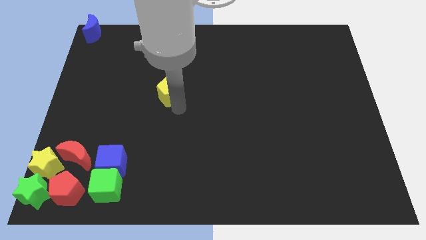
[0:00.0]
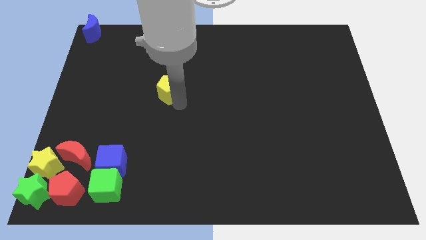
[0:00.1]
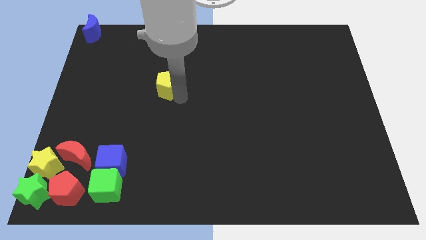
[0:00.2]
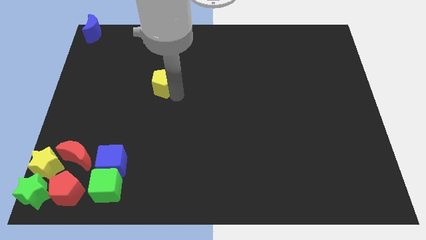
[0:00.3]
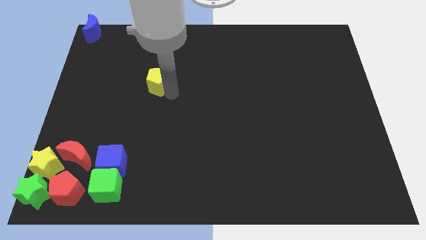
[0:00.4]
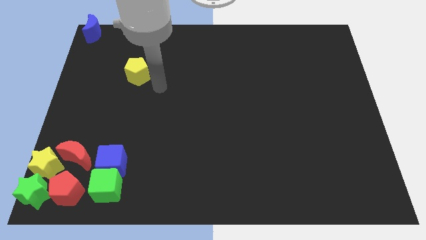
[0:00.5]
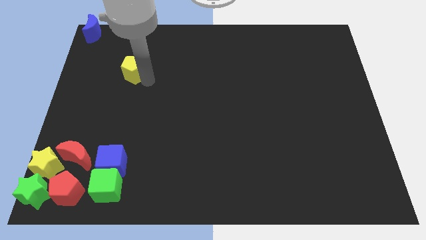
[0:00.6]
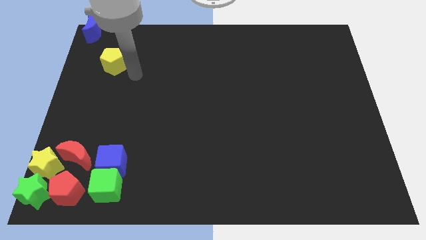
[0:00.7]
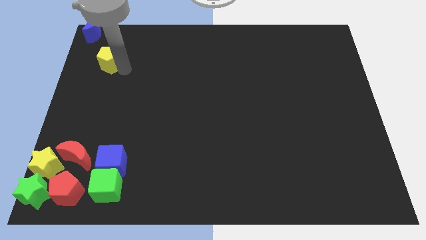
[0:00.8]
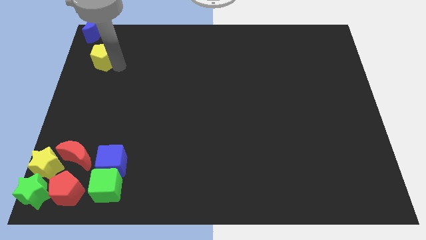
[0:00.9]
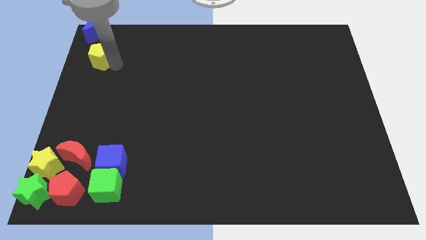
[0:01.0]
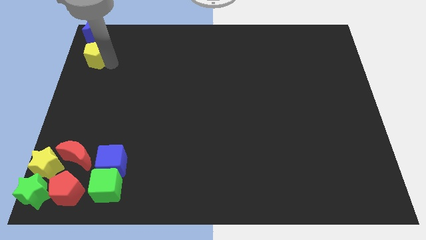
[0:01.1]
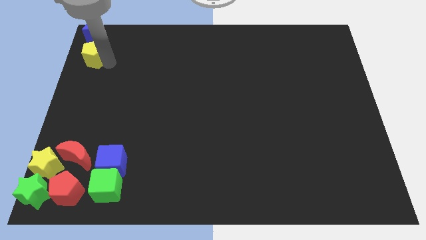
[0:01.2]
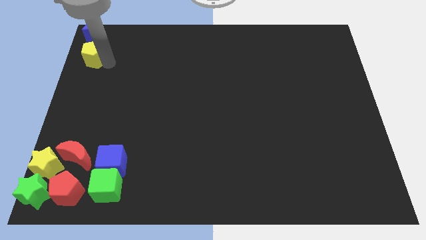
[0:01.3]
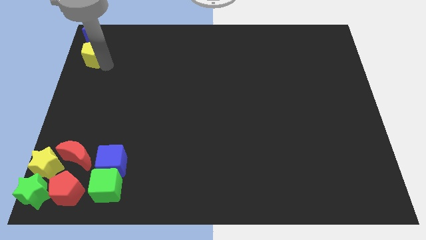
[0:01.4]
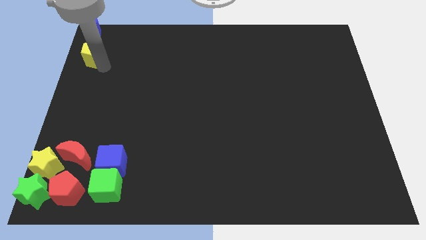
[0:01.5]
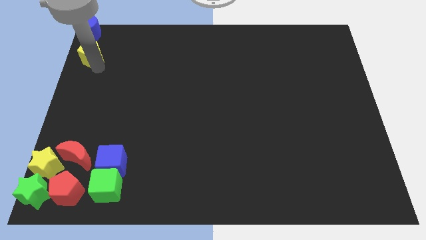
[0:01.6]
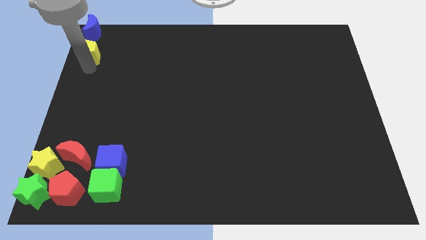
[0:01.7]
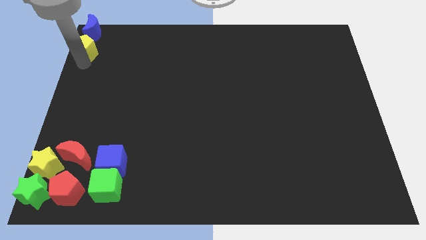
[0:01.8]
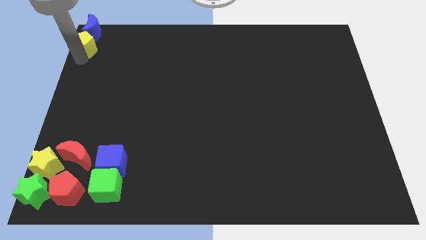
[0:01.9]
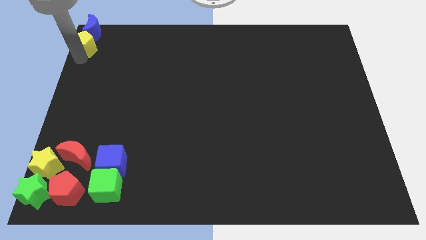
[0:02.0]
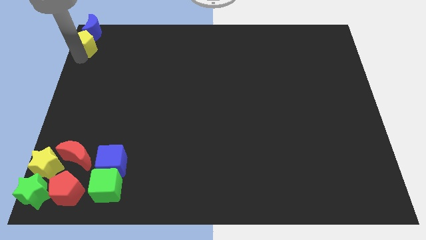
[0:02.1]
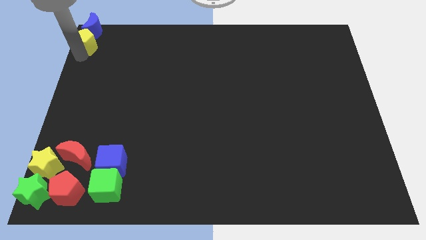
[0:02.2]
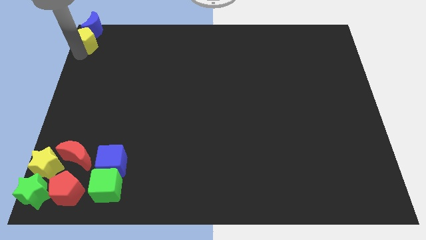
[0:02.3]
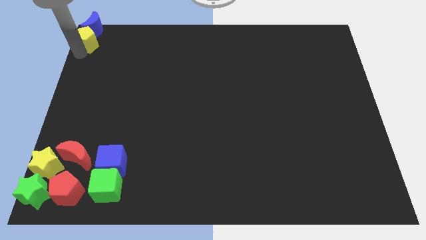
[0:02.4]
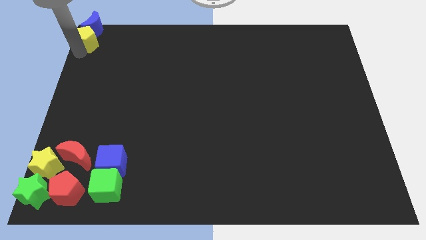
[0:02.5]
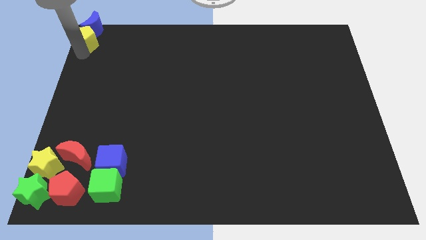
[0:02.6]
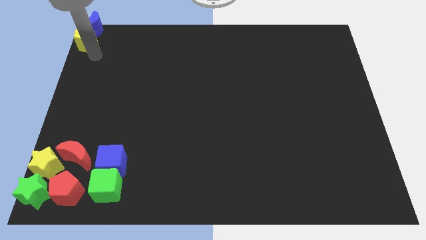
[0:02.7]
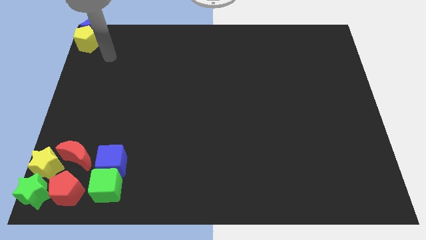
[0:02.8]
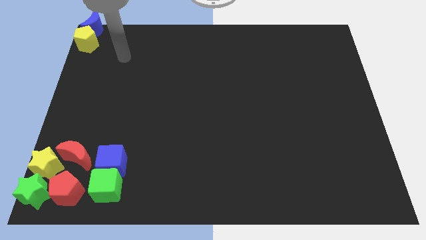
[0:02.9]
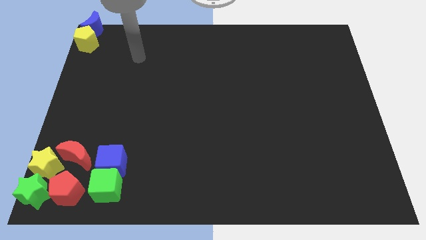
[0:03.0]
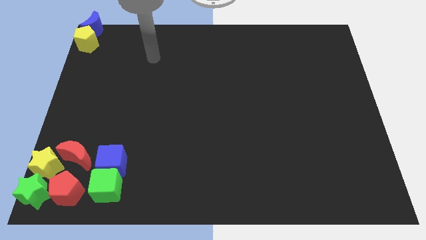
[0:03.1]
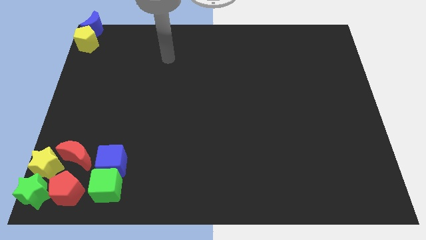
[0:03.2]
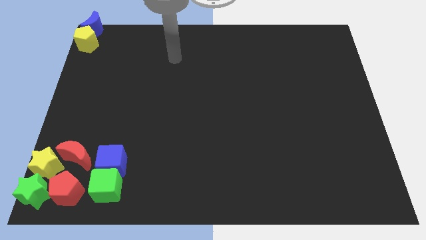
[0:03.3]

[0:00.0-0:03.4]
place the yellow pentagon at the top left corner

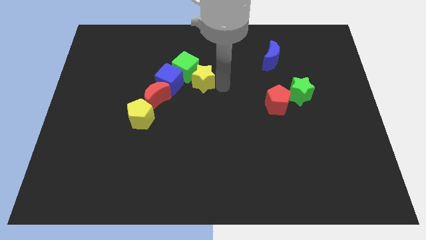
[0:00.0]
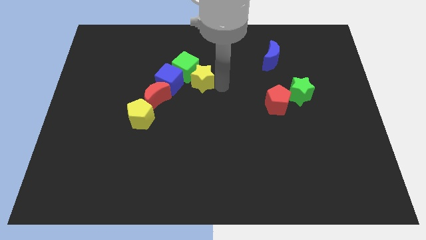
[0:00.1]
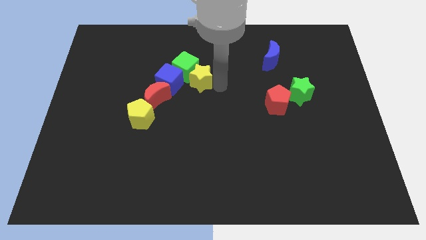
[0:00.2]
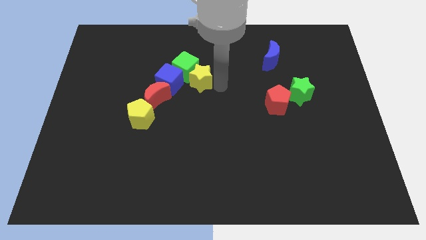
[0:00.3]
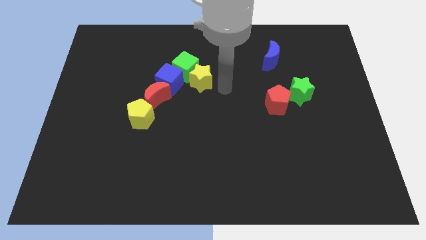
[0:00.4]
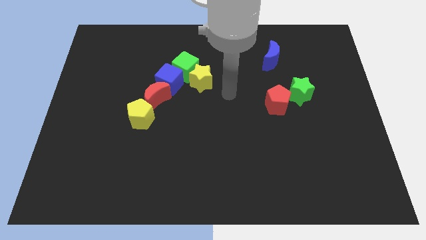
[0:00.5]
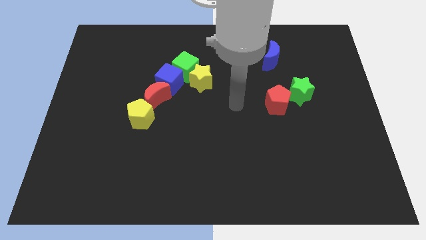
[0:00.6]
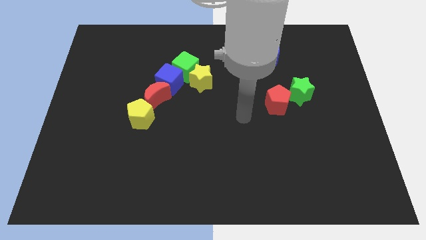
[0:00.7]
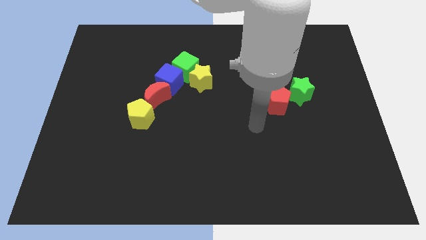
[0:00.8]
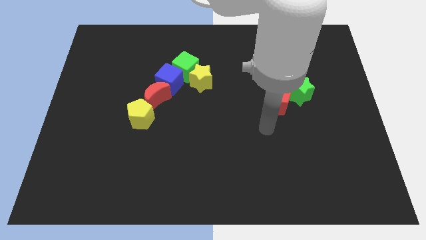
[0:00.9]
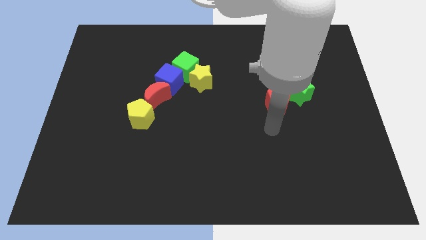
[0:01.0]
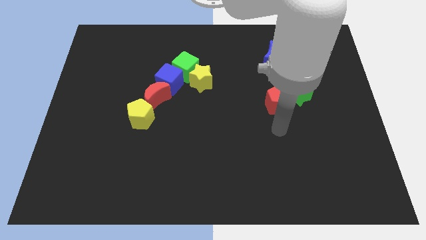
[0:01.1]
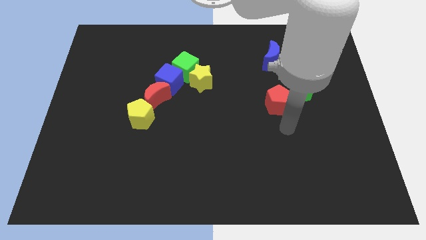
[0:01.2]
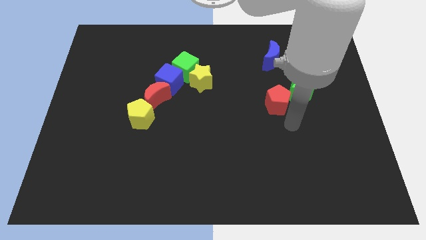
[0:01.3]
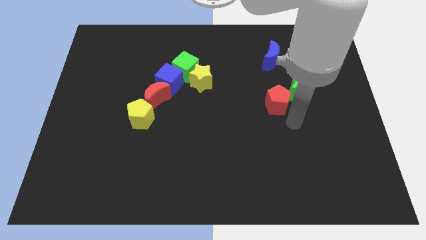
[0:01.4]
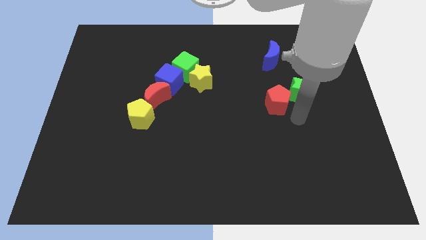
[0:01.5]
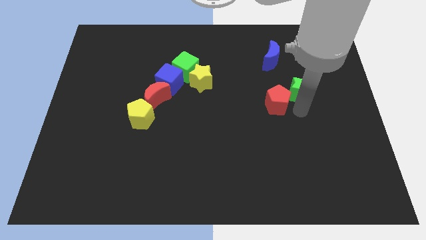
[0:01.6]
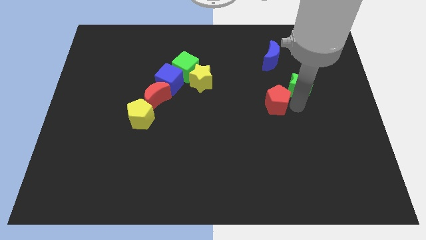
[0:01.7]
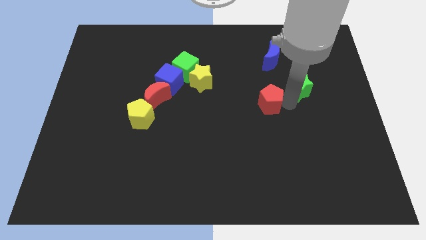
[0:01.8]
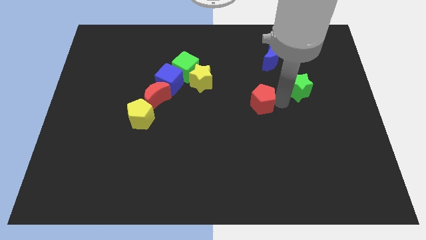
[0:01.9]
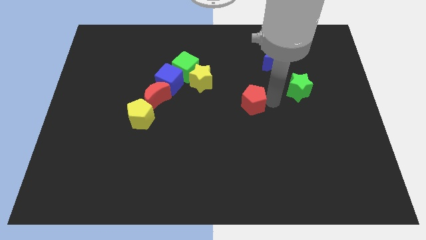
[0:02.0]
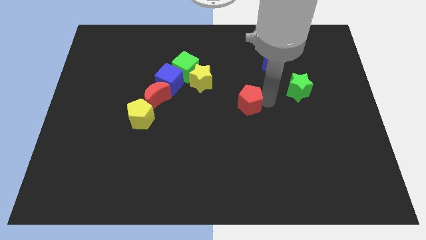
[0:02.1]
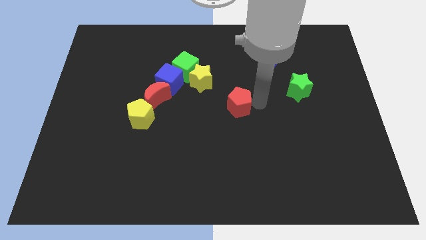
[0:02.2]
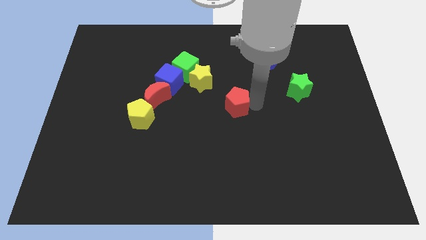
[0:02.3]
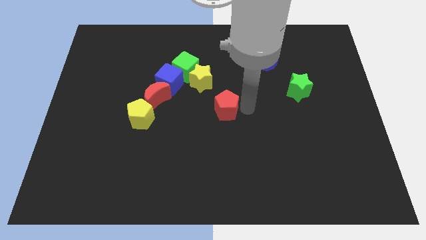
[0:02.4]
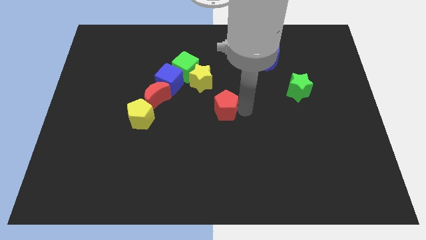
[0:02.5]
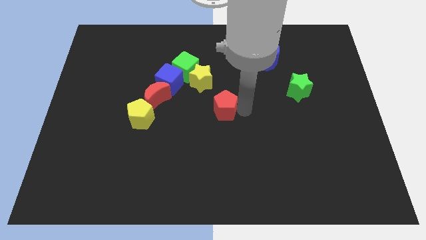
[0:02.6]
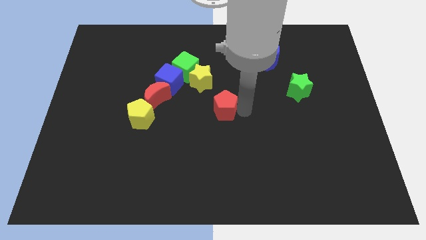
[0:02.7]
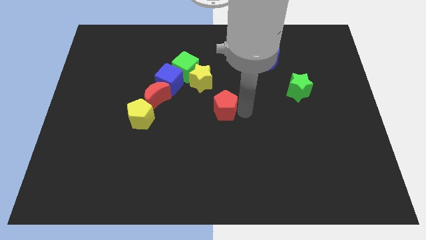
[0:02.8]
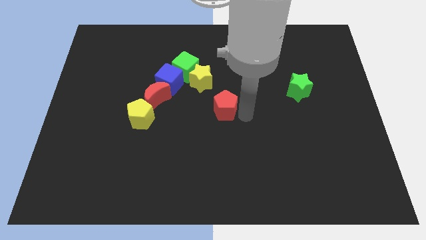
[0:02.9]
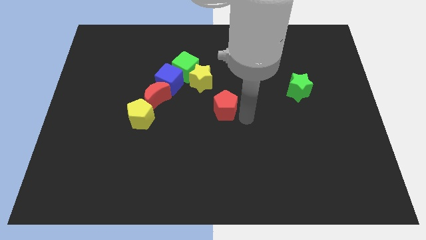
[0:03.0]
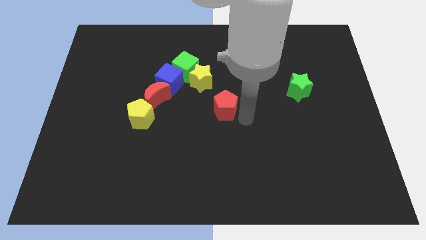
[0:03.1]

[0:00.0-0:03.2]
move the red pentagon diagonal bottom right to the yellow star

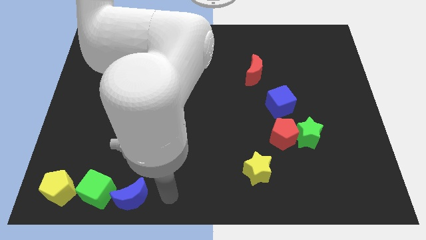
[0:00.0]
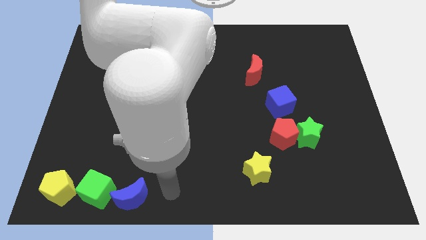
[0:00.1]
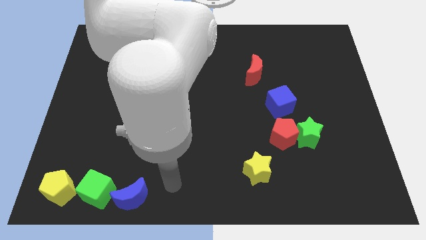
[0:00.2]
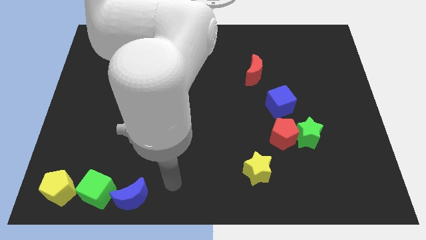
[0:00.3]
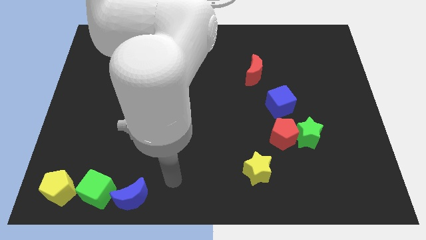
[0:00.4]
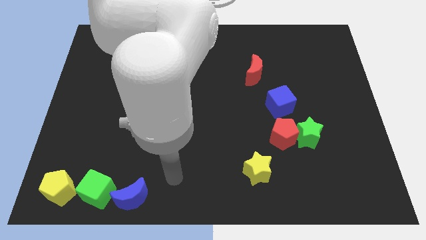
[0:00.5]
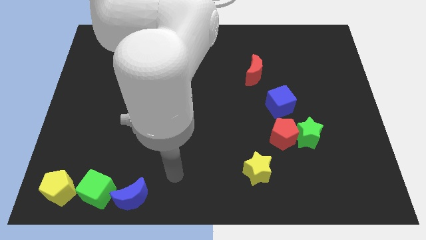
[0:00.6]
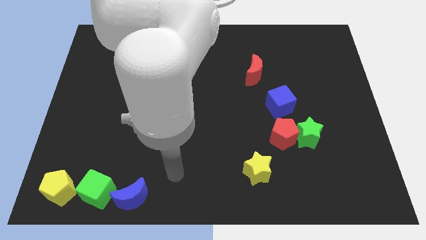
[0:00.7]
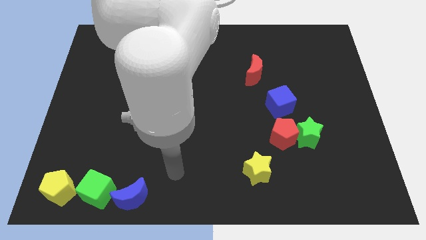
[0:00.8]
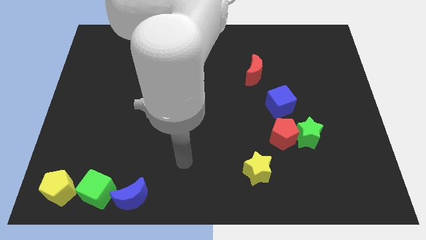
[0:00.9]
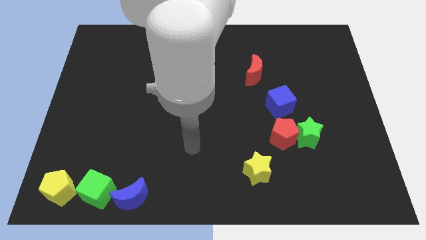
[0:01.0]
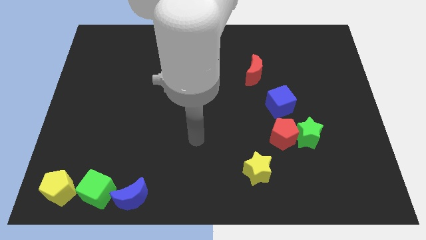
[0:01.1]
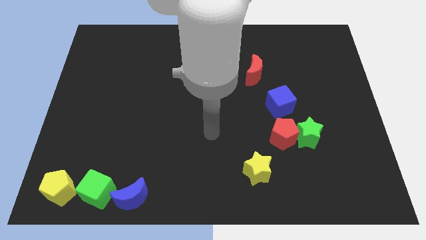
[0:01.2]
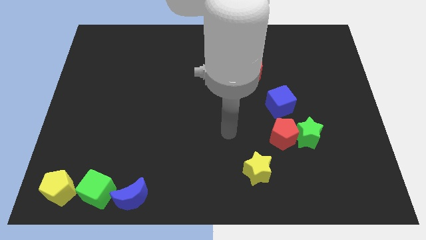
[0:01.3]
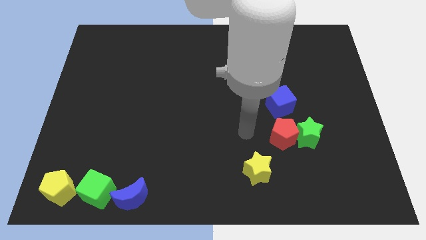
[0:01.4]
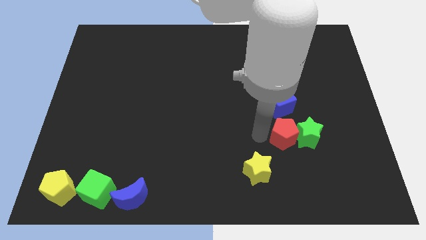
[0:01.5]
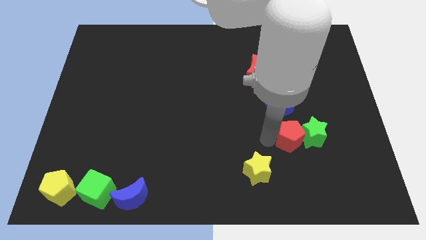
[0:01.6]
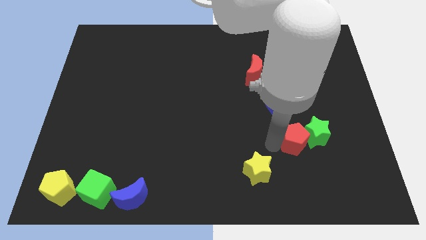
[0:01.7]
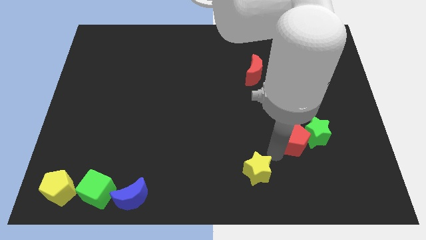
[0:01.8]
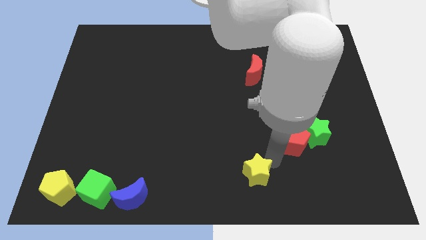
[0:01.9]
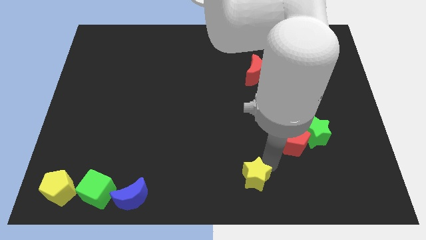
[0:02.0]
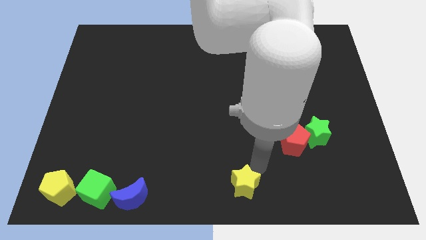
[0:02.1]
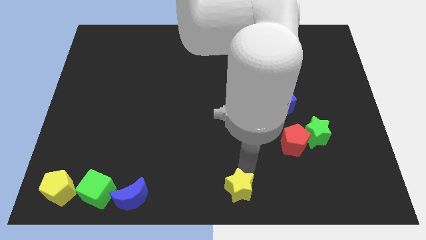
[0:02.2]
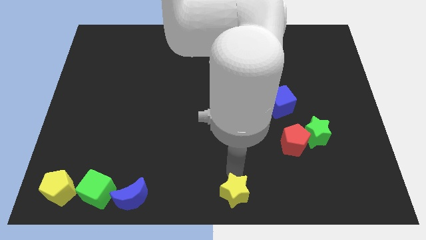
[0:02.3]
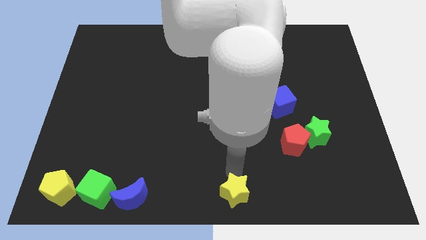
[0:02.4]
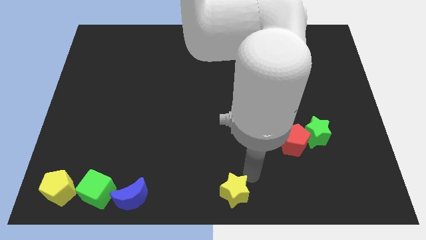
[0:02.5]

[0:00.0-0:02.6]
push the yellow star to the bottom center of the board
